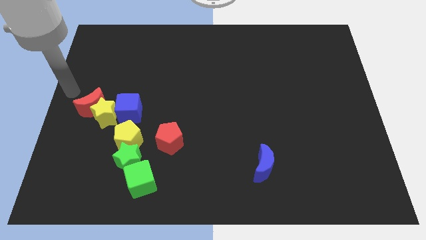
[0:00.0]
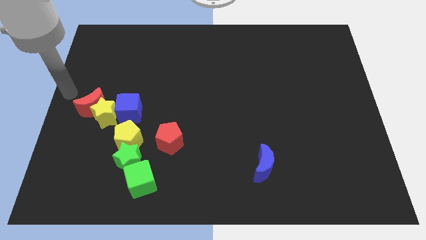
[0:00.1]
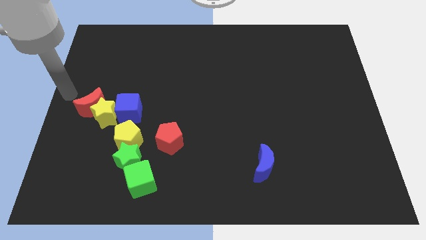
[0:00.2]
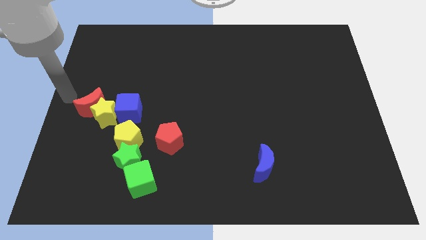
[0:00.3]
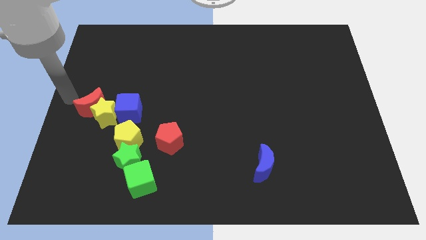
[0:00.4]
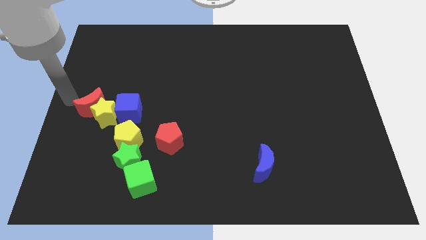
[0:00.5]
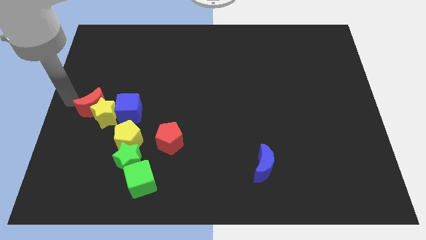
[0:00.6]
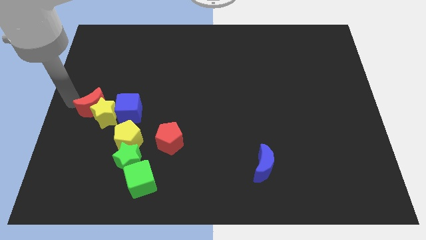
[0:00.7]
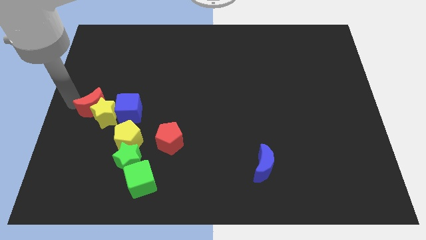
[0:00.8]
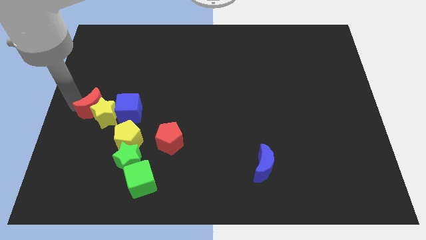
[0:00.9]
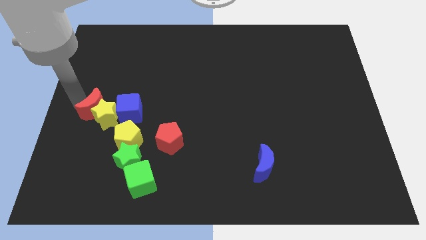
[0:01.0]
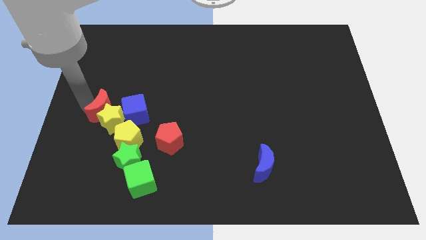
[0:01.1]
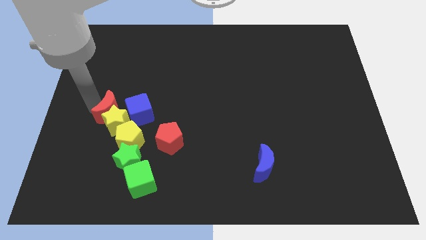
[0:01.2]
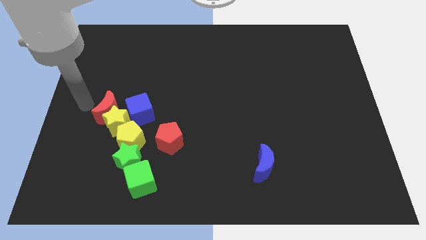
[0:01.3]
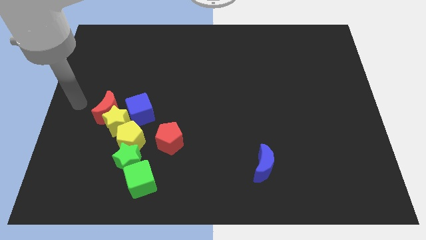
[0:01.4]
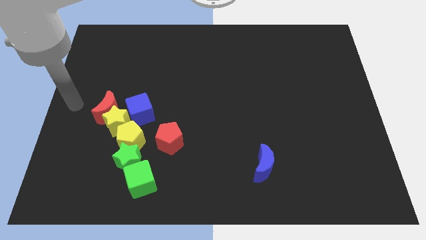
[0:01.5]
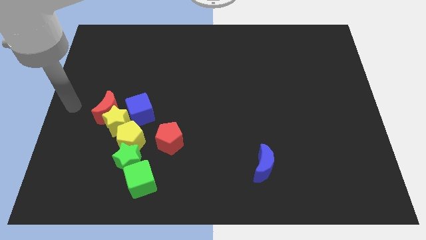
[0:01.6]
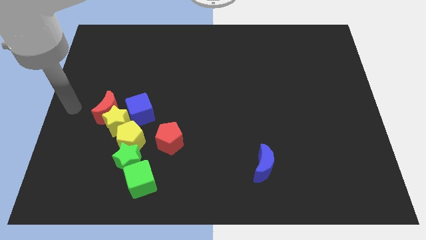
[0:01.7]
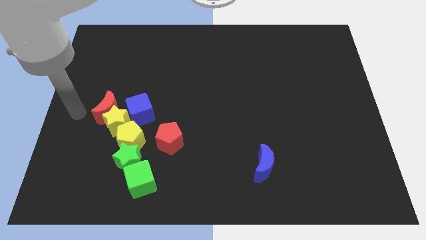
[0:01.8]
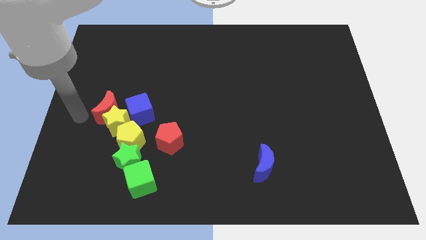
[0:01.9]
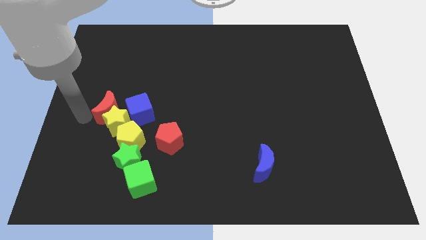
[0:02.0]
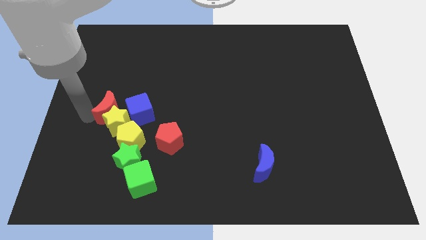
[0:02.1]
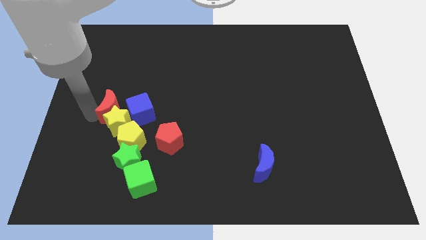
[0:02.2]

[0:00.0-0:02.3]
push the red moon into the yellow star

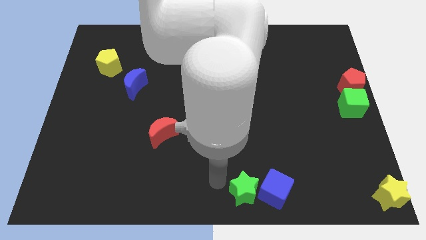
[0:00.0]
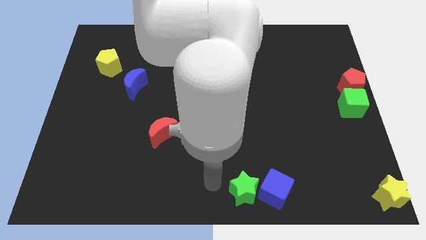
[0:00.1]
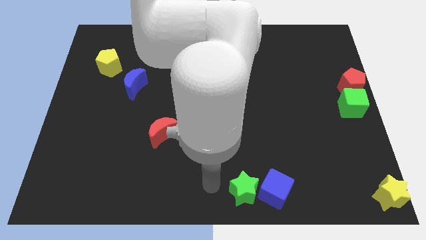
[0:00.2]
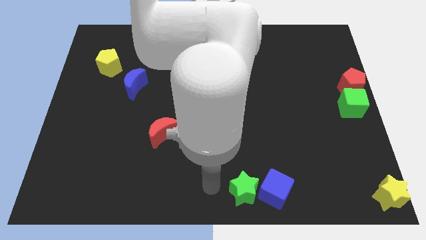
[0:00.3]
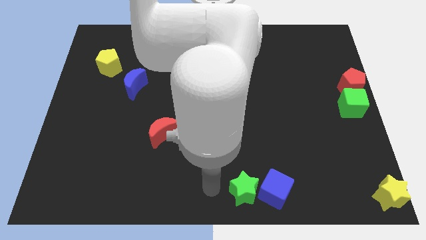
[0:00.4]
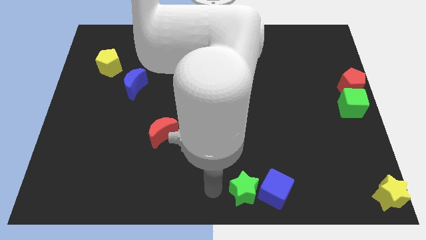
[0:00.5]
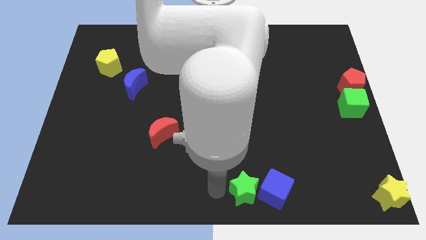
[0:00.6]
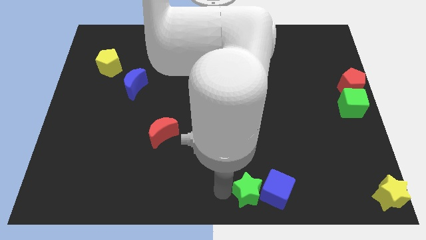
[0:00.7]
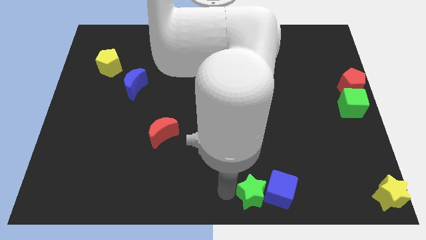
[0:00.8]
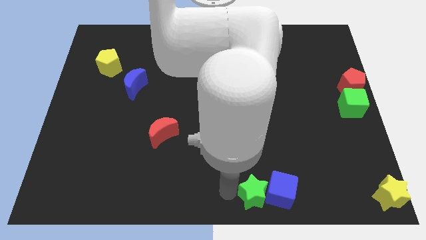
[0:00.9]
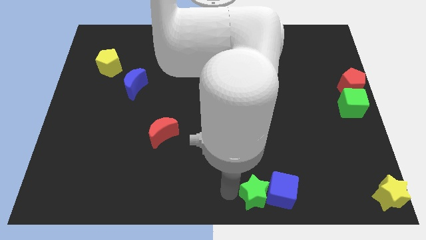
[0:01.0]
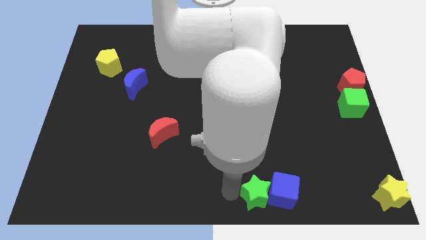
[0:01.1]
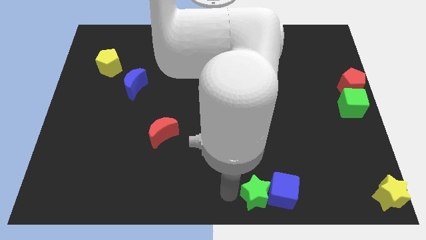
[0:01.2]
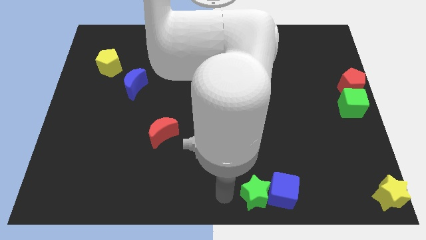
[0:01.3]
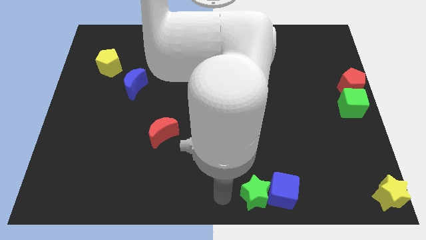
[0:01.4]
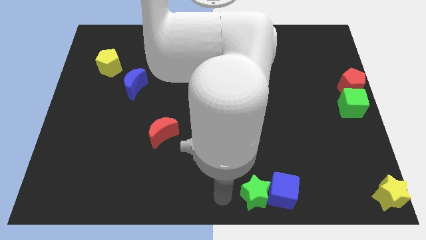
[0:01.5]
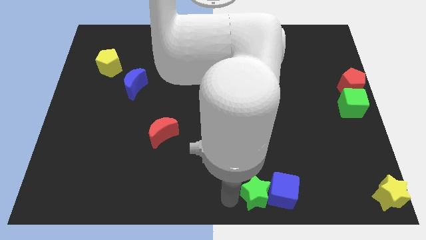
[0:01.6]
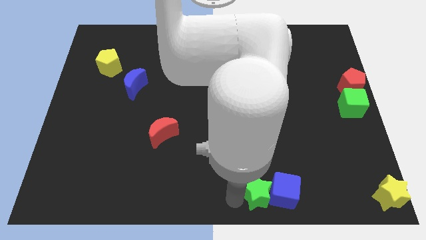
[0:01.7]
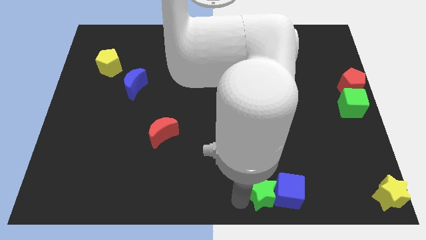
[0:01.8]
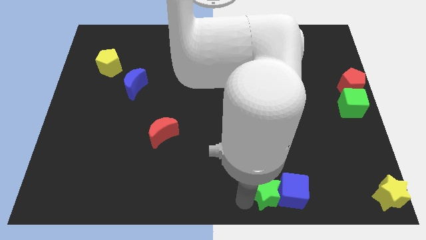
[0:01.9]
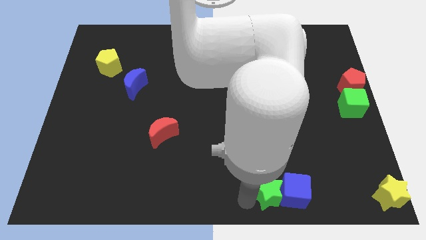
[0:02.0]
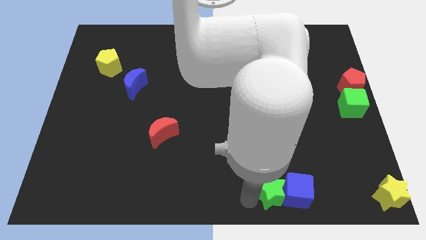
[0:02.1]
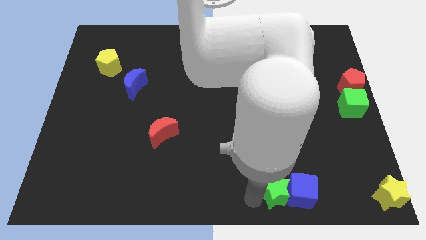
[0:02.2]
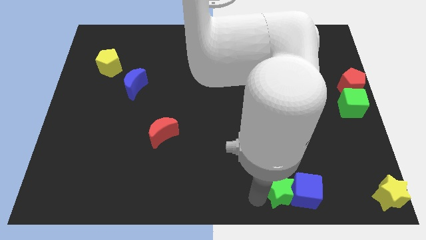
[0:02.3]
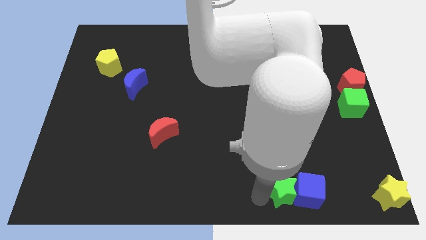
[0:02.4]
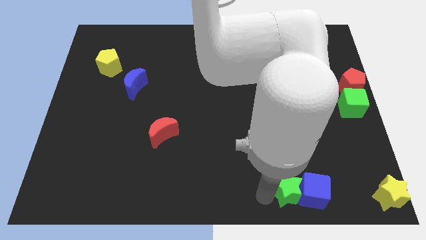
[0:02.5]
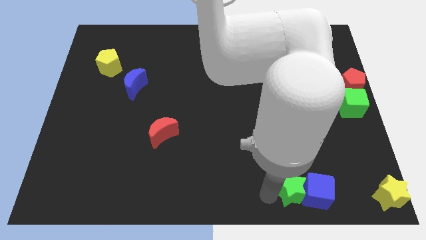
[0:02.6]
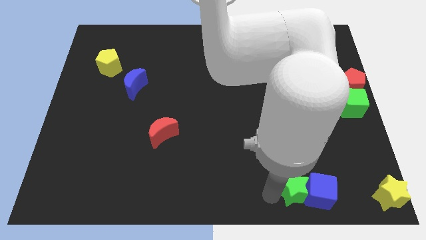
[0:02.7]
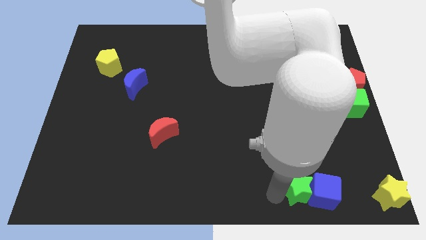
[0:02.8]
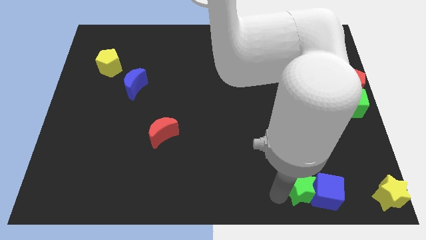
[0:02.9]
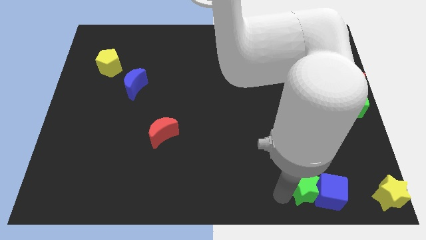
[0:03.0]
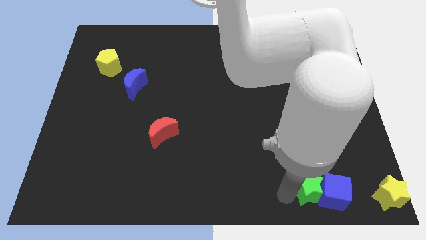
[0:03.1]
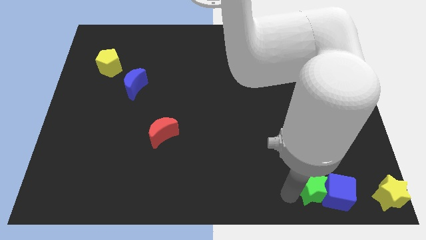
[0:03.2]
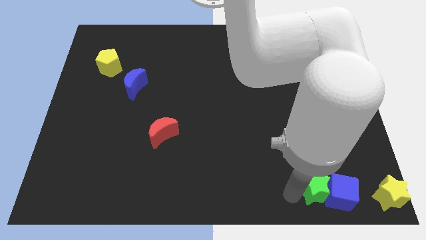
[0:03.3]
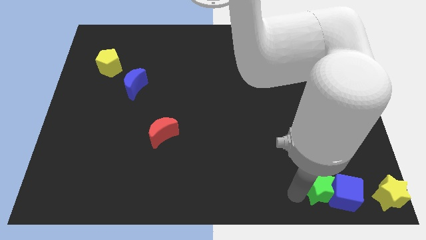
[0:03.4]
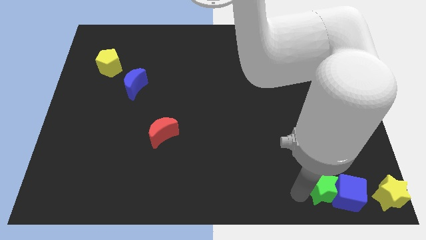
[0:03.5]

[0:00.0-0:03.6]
push green star blue cube towards yellow star

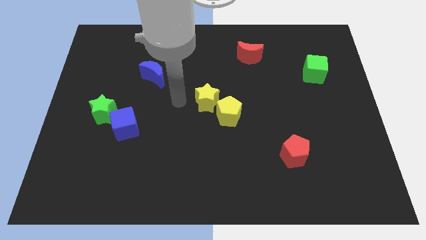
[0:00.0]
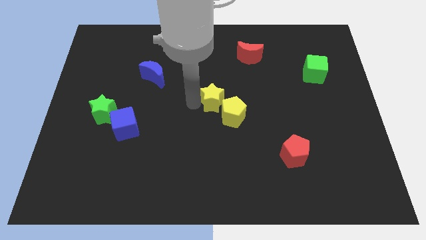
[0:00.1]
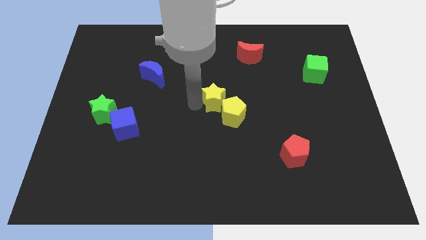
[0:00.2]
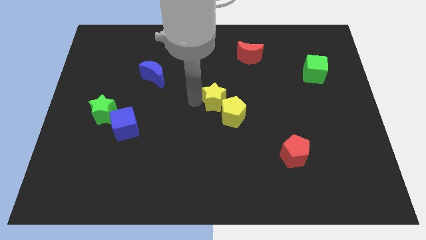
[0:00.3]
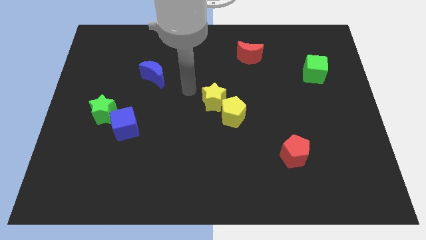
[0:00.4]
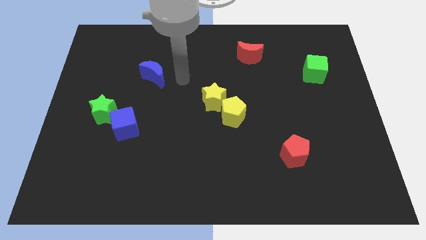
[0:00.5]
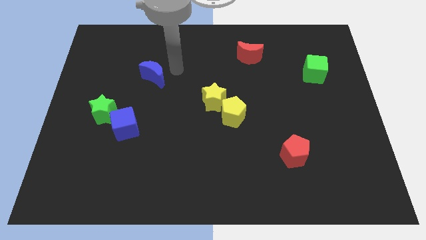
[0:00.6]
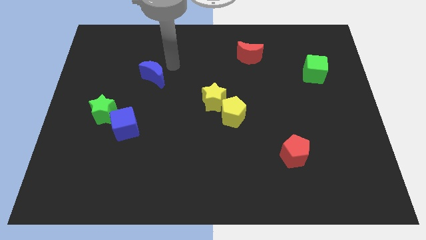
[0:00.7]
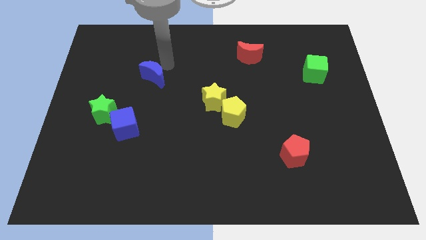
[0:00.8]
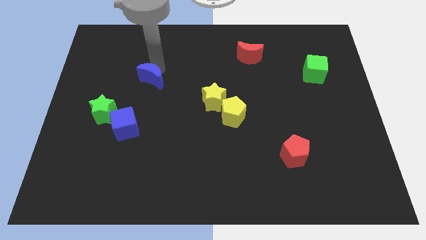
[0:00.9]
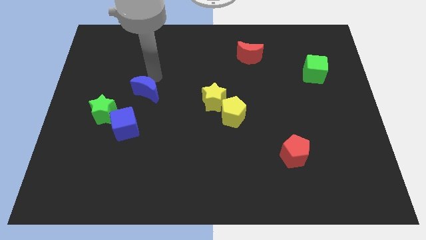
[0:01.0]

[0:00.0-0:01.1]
touch the blue moon

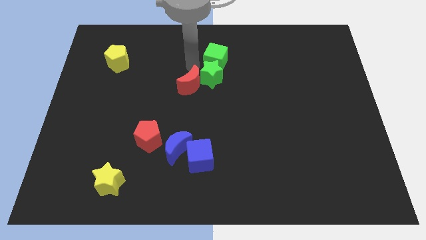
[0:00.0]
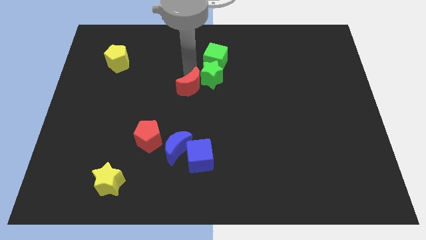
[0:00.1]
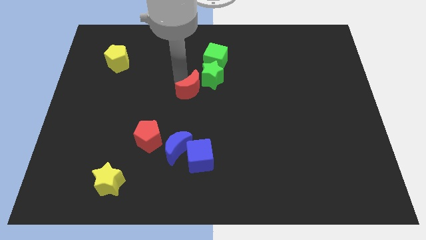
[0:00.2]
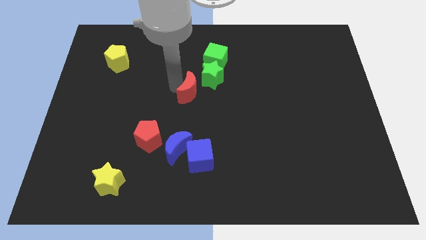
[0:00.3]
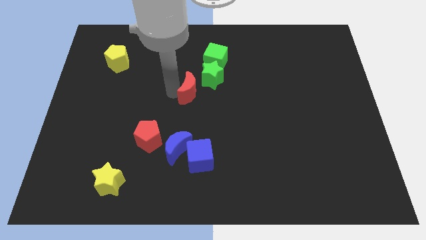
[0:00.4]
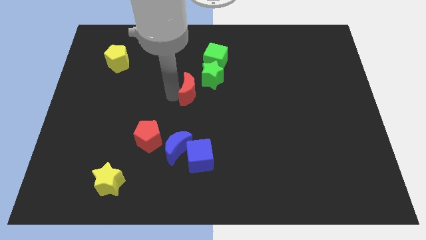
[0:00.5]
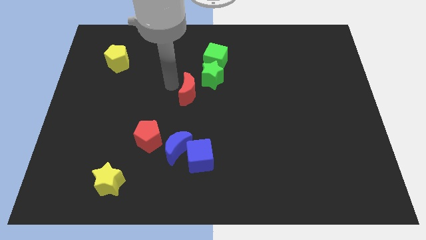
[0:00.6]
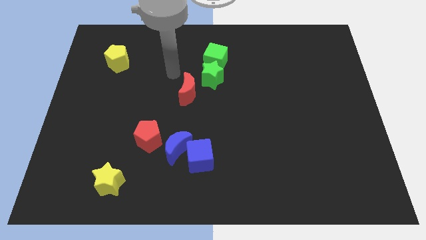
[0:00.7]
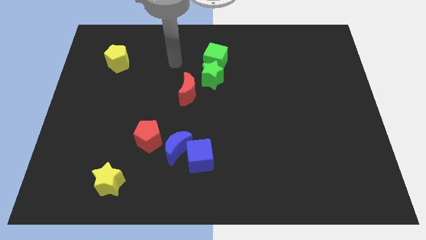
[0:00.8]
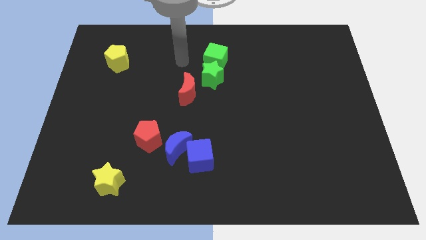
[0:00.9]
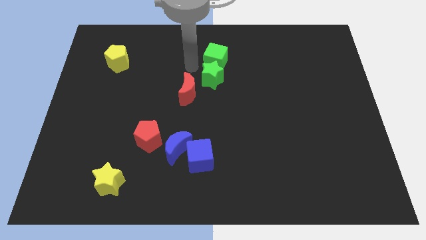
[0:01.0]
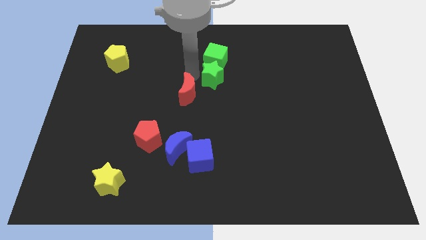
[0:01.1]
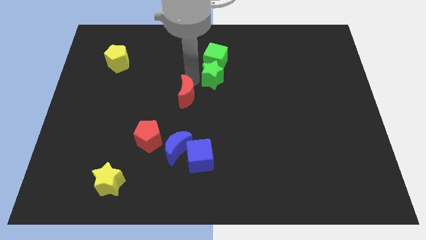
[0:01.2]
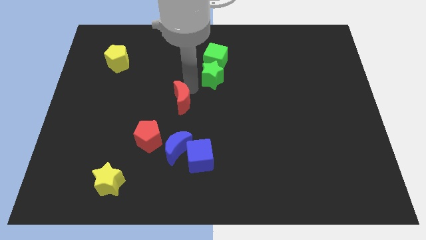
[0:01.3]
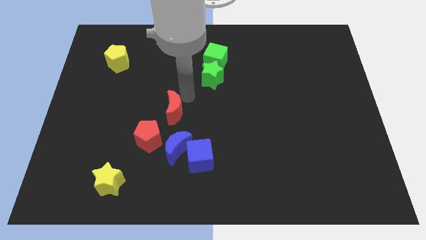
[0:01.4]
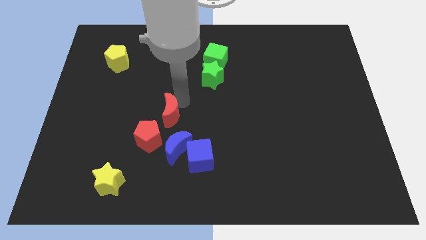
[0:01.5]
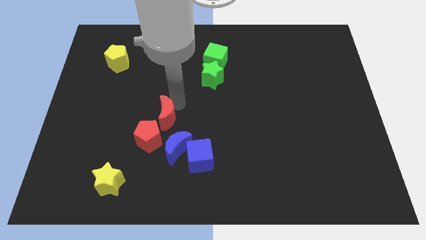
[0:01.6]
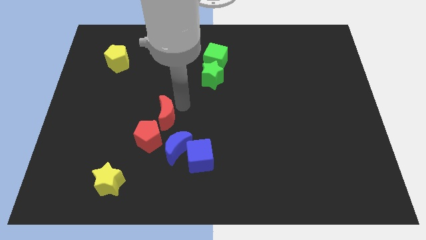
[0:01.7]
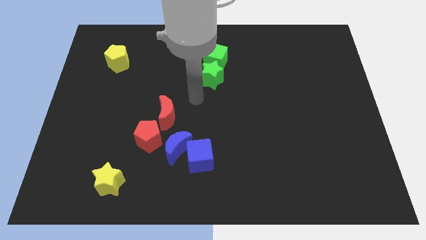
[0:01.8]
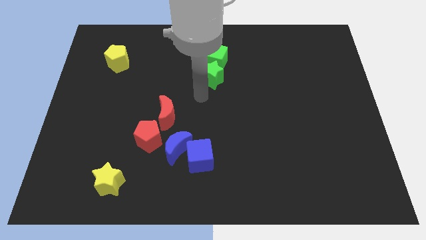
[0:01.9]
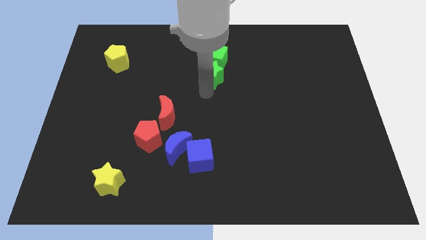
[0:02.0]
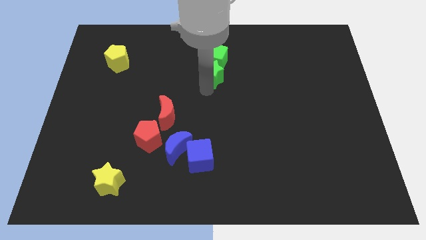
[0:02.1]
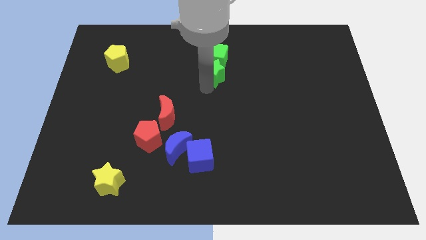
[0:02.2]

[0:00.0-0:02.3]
place the red crescent towards the top right side of the red pentagon
